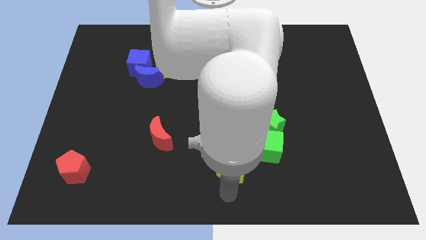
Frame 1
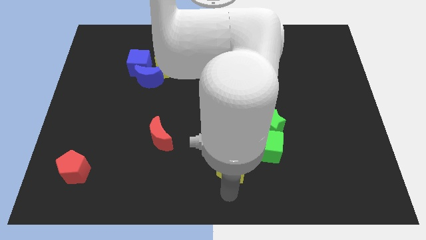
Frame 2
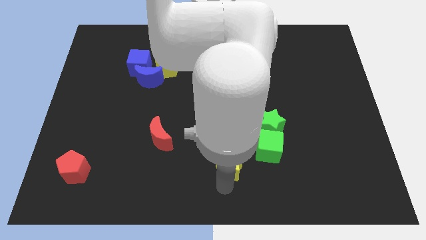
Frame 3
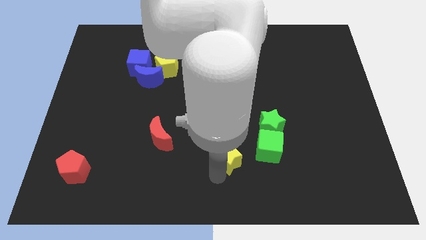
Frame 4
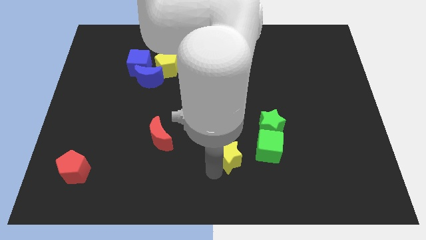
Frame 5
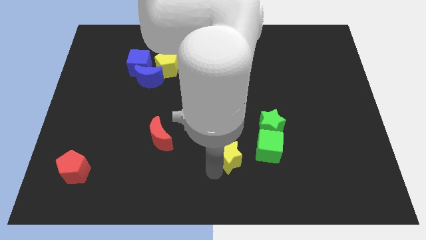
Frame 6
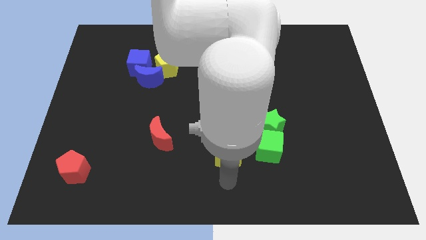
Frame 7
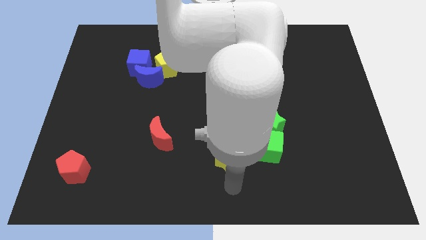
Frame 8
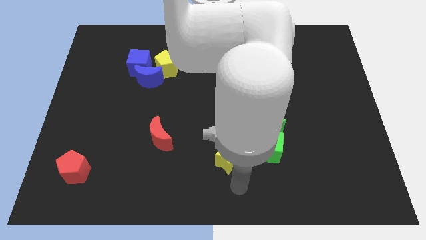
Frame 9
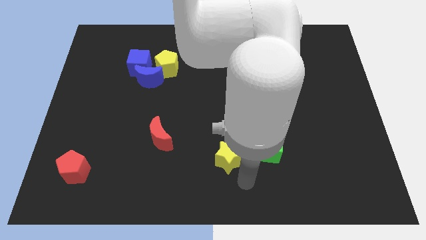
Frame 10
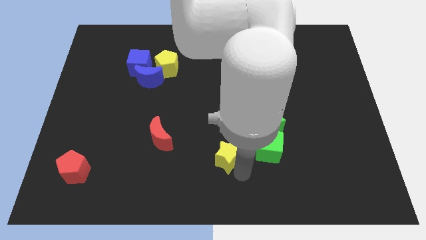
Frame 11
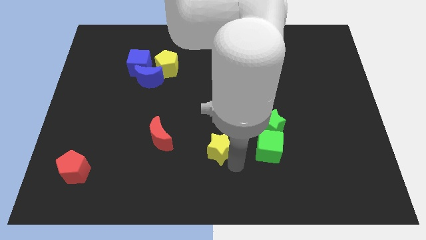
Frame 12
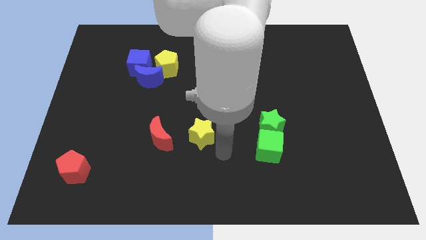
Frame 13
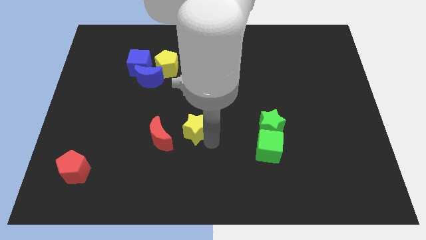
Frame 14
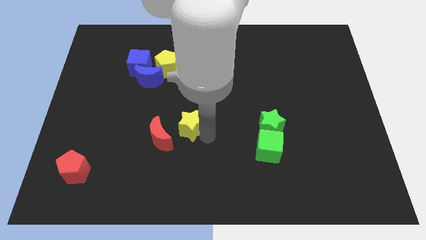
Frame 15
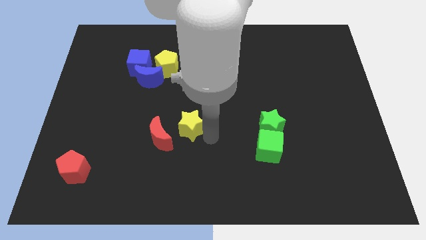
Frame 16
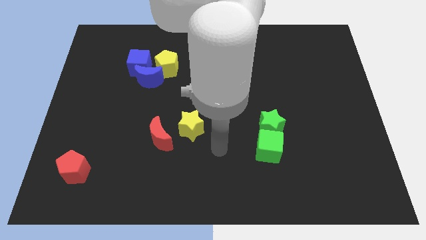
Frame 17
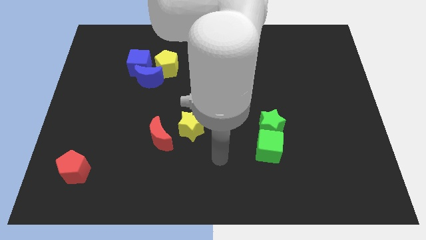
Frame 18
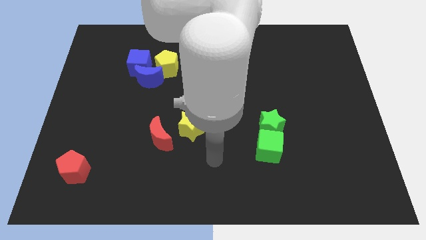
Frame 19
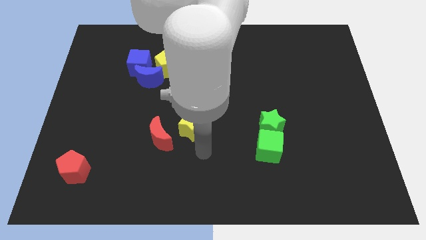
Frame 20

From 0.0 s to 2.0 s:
move the yellow star to the left of the group of green blocks

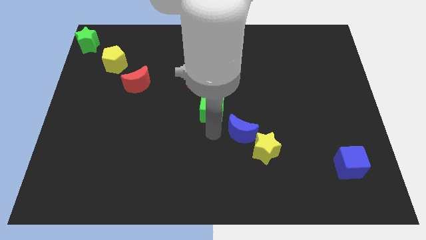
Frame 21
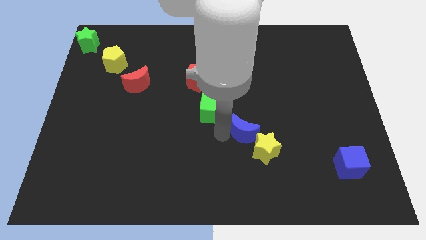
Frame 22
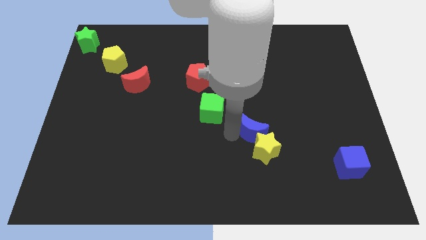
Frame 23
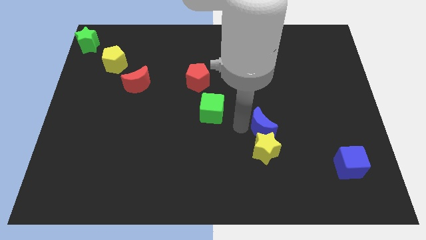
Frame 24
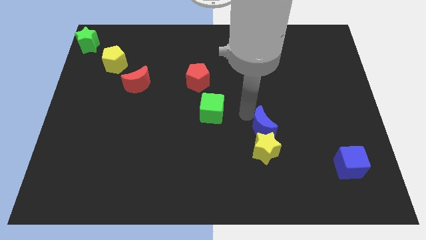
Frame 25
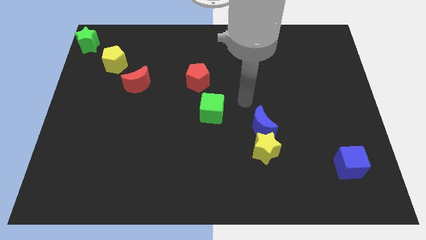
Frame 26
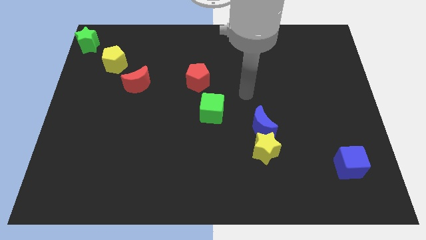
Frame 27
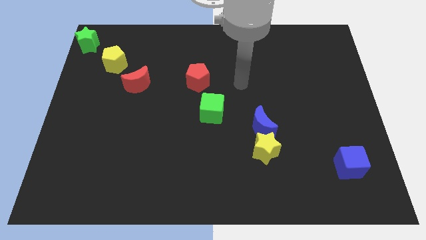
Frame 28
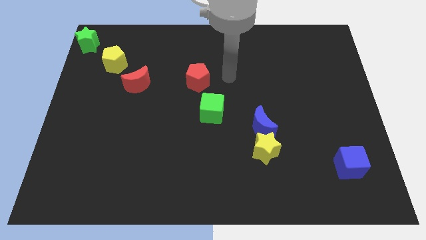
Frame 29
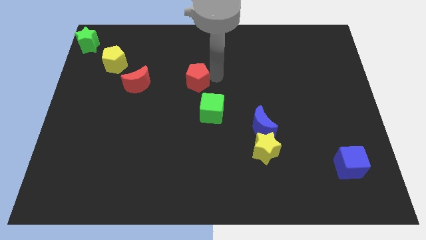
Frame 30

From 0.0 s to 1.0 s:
place the blue moon over the yellow star

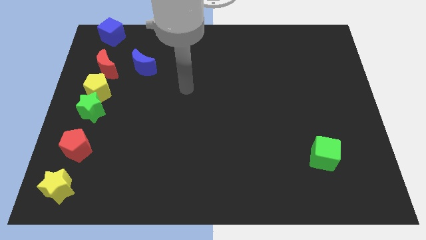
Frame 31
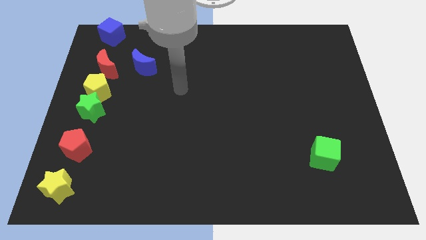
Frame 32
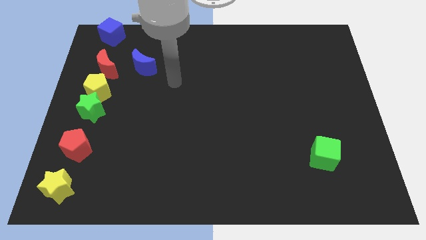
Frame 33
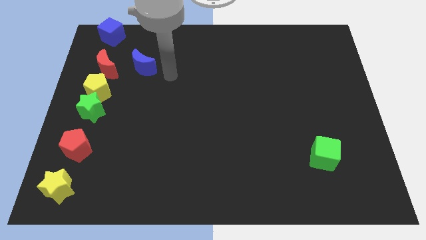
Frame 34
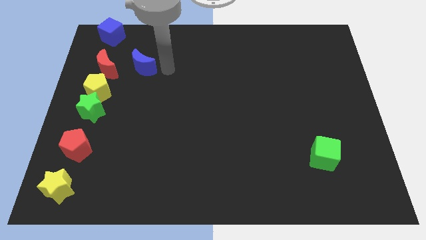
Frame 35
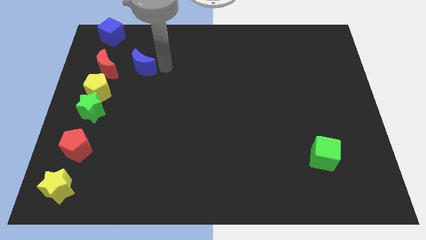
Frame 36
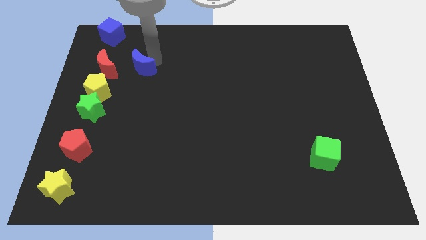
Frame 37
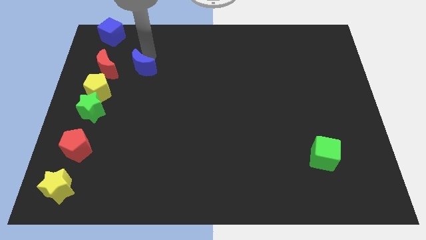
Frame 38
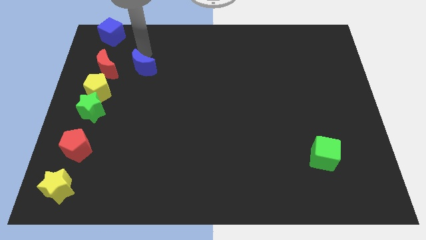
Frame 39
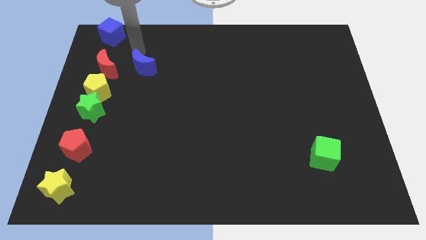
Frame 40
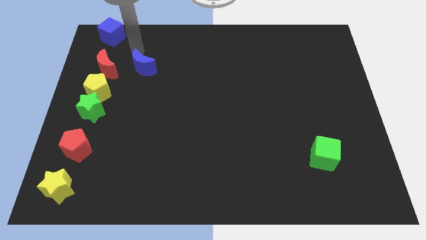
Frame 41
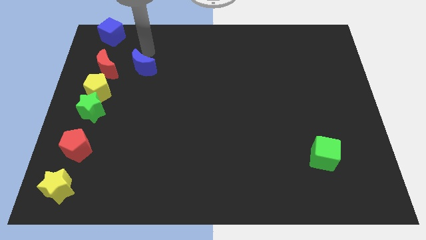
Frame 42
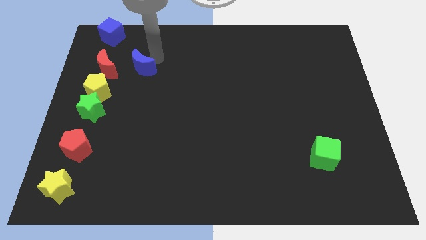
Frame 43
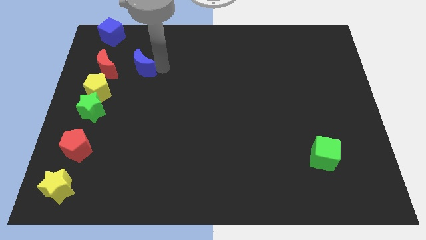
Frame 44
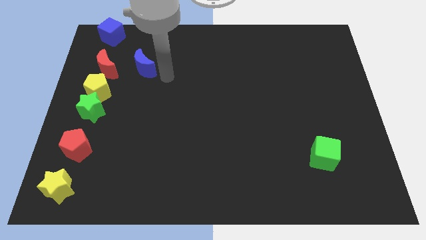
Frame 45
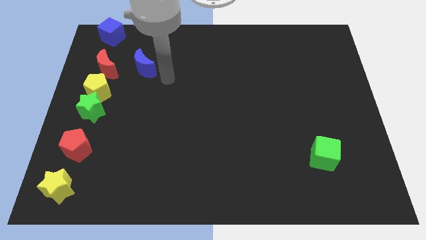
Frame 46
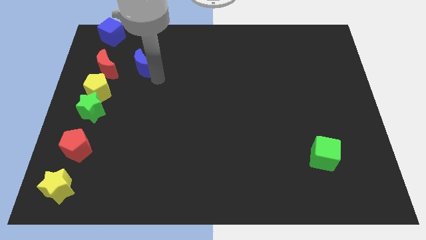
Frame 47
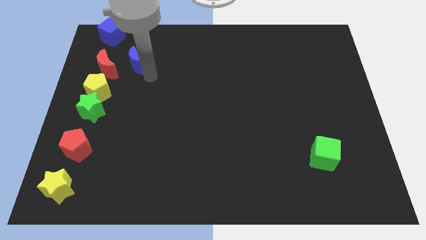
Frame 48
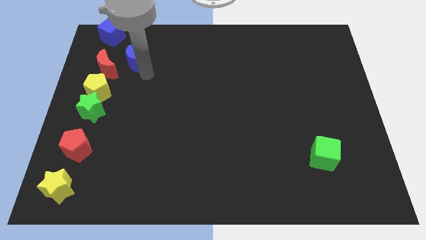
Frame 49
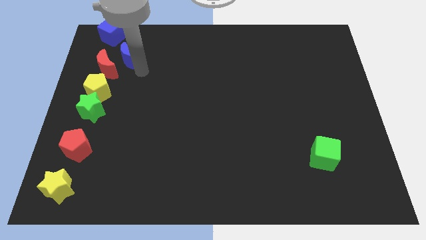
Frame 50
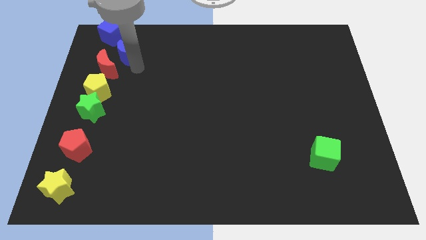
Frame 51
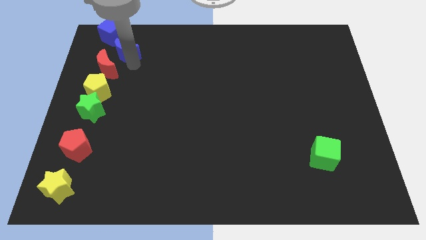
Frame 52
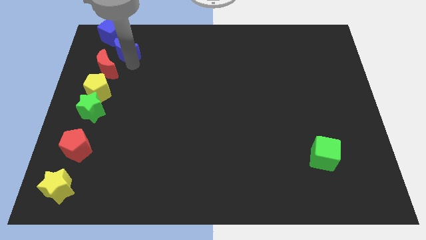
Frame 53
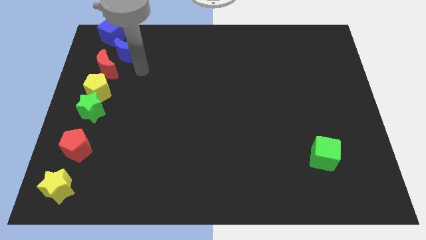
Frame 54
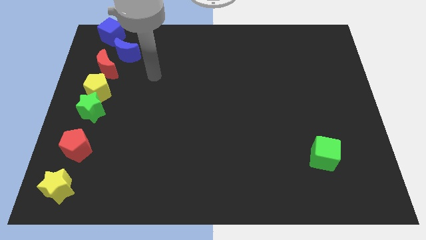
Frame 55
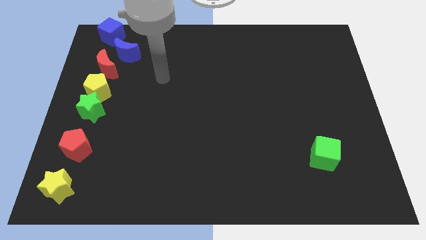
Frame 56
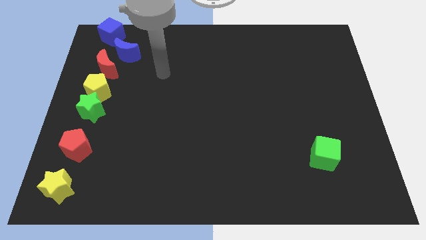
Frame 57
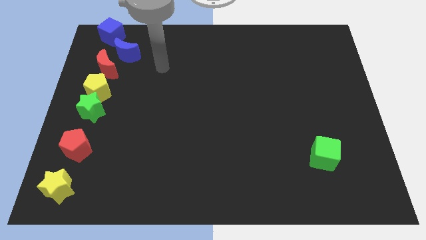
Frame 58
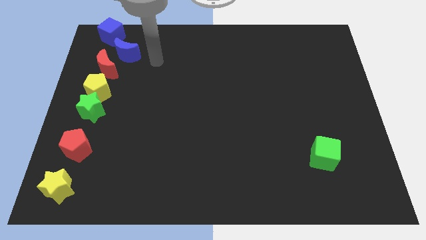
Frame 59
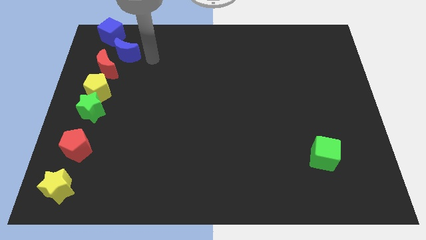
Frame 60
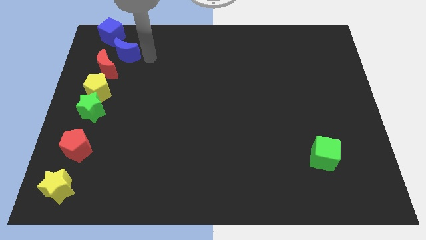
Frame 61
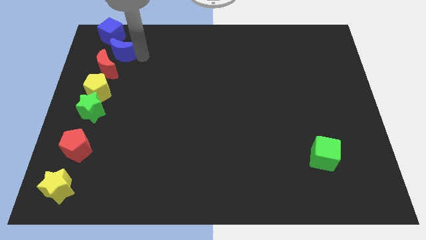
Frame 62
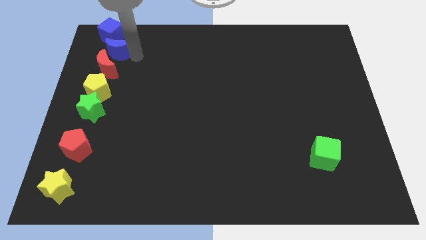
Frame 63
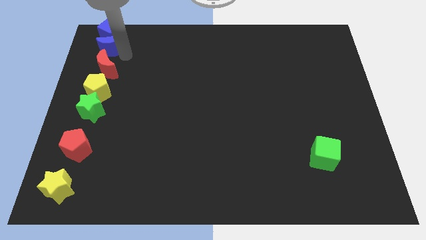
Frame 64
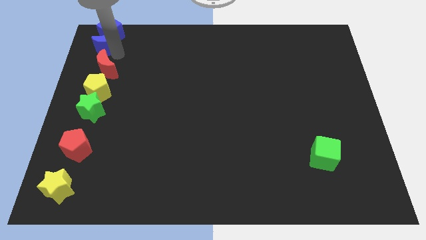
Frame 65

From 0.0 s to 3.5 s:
push the blue crescent to the top of the red crescent

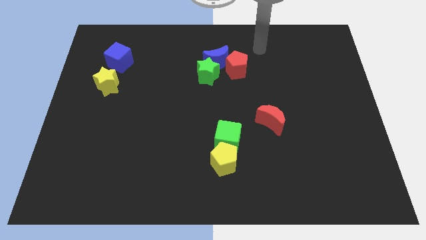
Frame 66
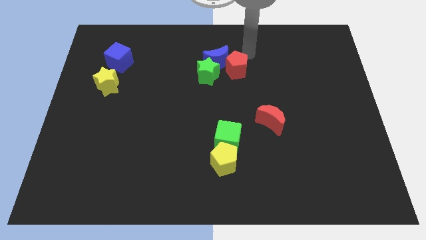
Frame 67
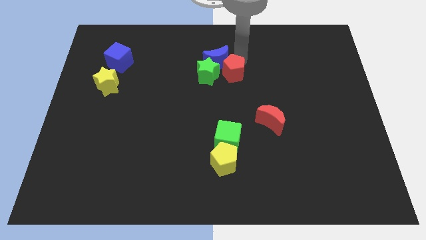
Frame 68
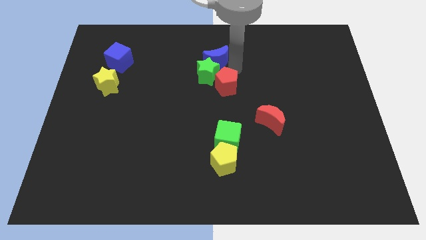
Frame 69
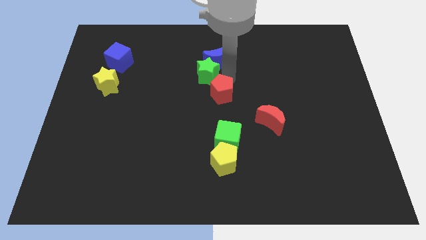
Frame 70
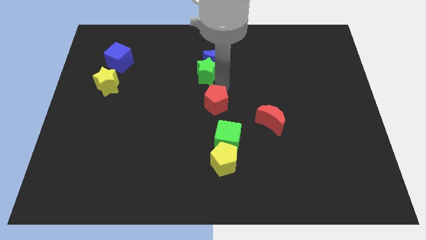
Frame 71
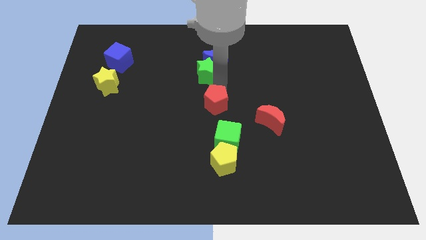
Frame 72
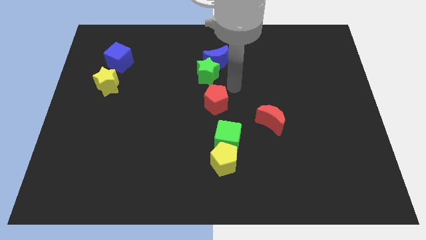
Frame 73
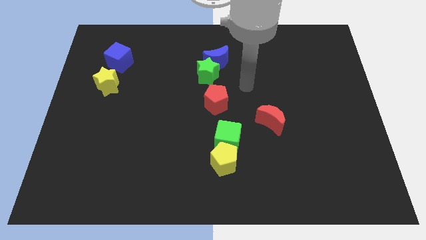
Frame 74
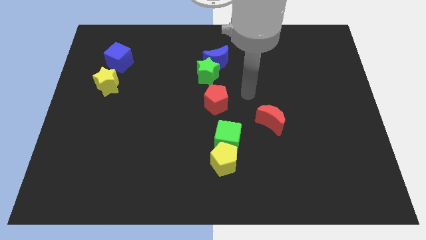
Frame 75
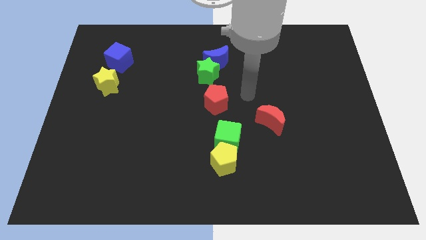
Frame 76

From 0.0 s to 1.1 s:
place red pentagon in between the green star and green cube

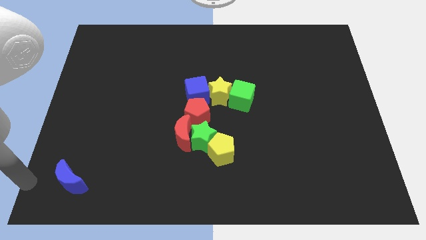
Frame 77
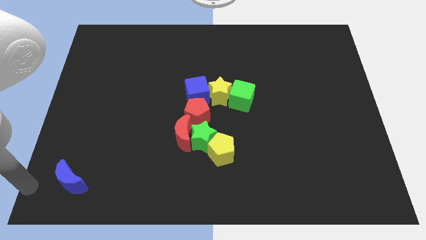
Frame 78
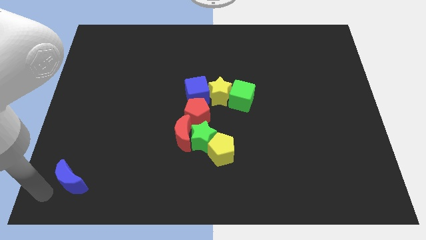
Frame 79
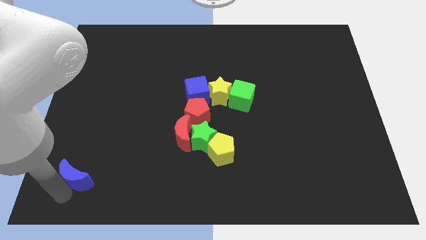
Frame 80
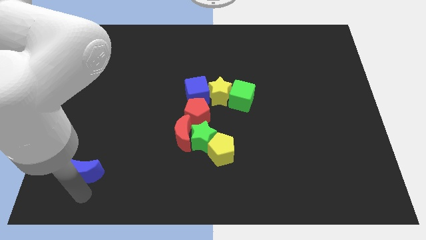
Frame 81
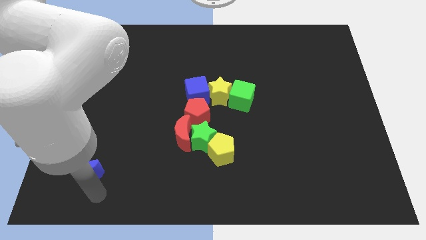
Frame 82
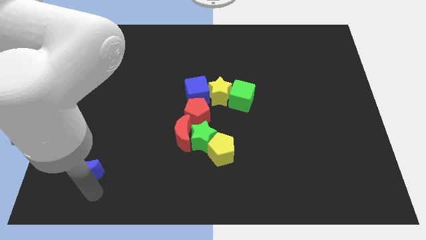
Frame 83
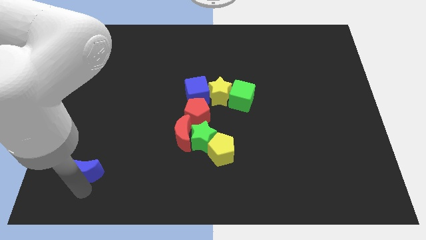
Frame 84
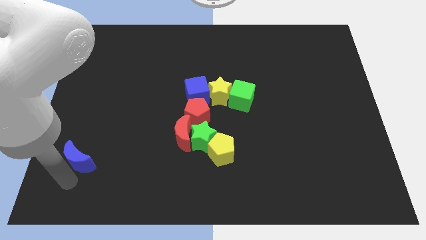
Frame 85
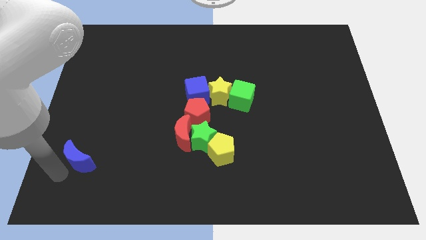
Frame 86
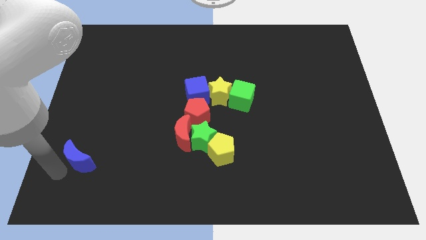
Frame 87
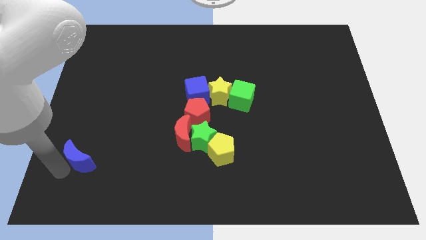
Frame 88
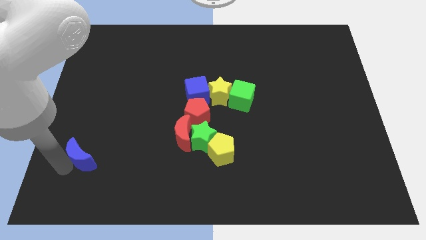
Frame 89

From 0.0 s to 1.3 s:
move the blue crescent to the top of the board
